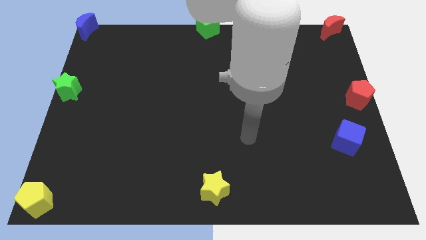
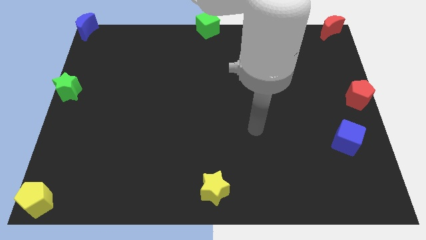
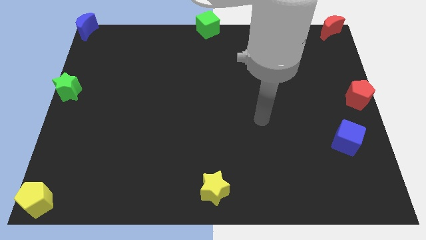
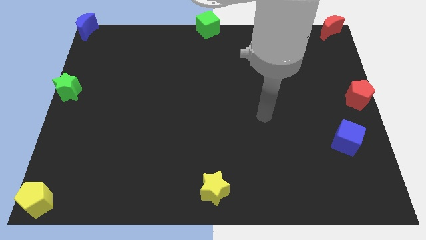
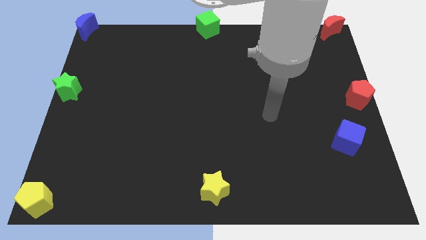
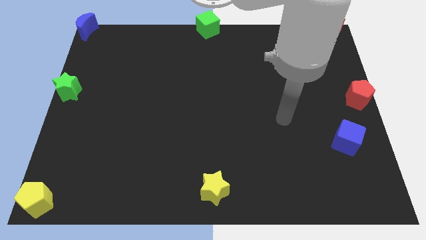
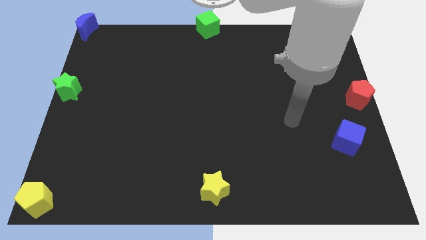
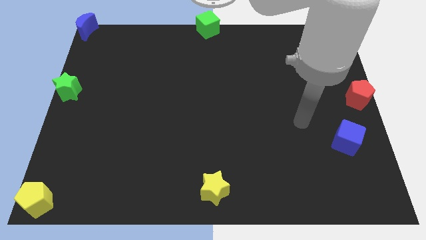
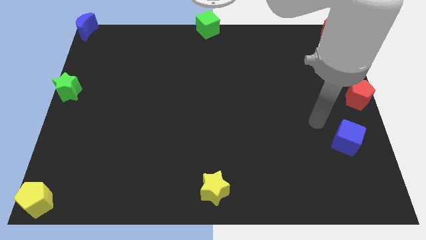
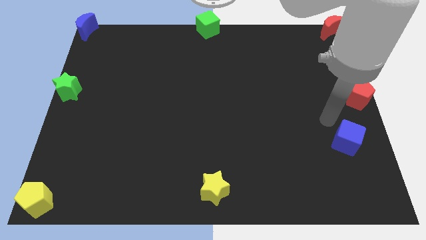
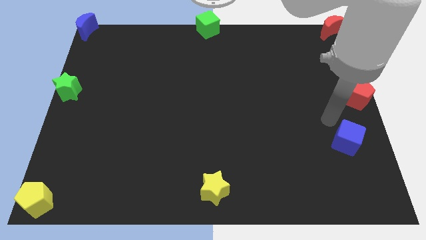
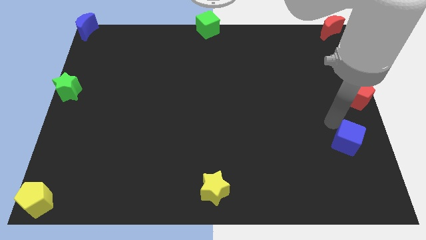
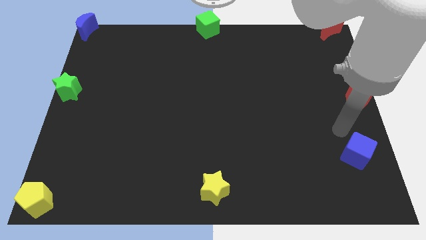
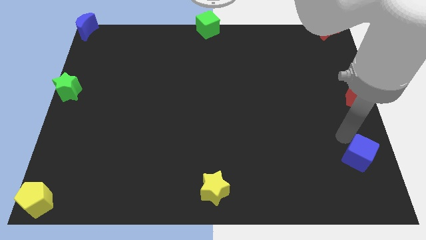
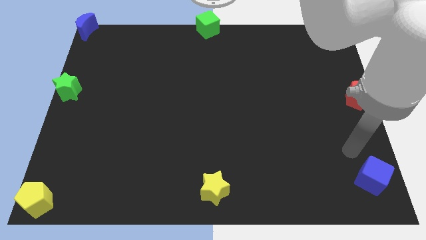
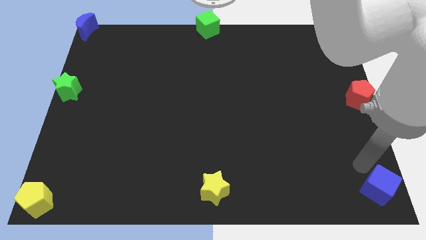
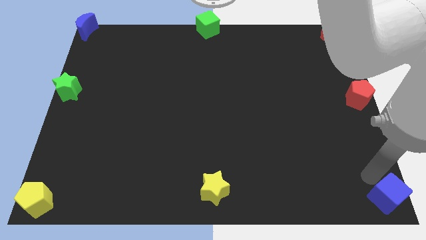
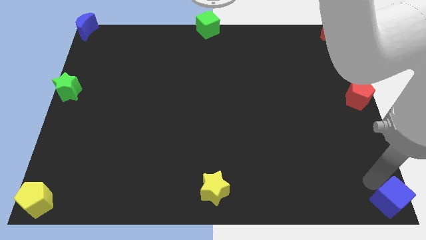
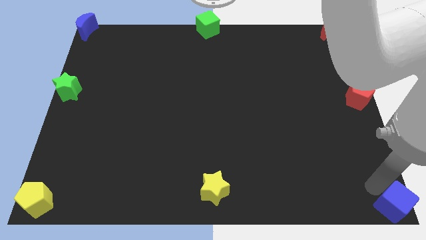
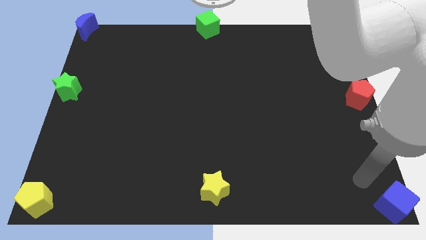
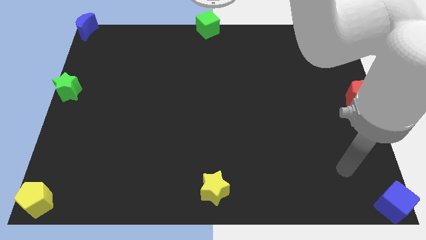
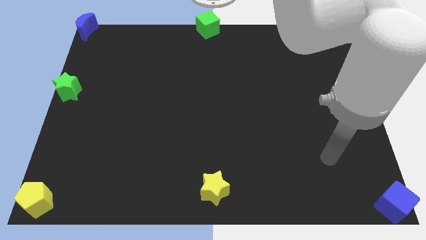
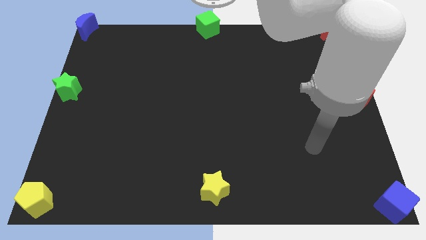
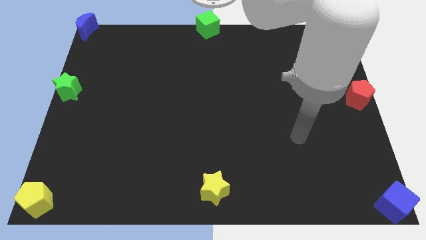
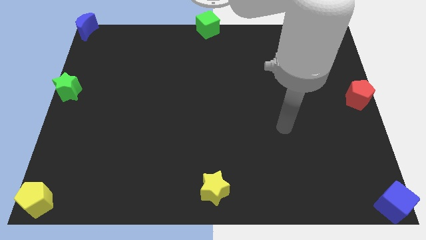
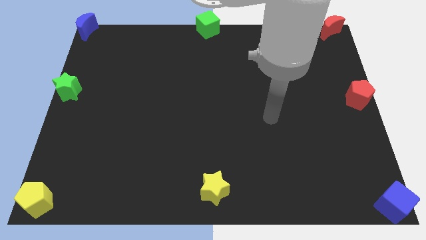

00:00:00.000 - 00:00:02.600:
move the blue cube to the right bottom corner of the board

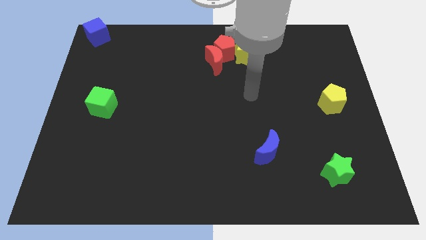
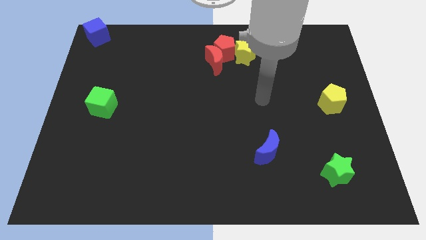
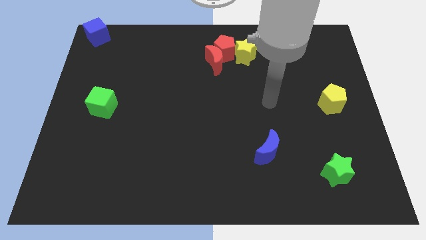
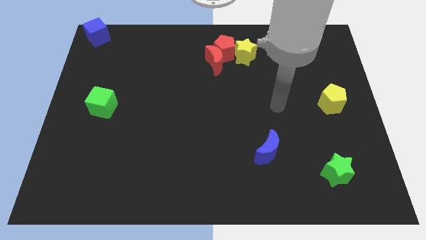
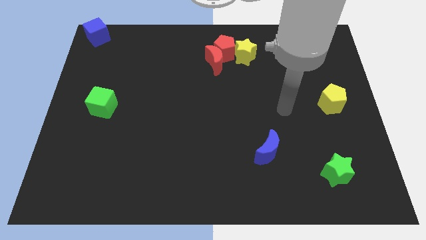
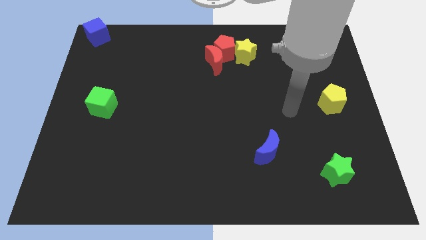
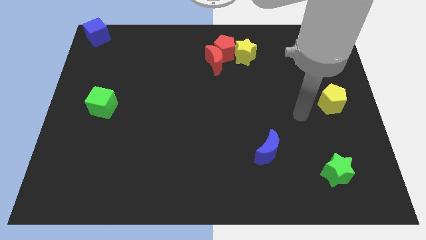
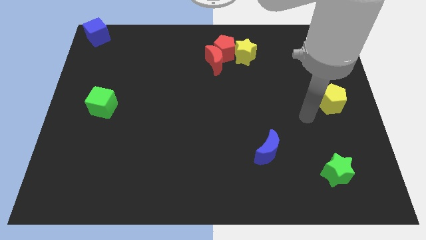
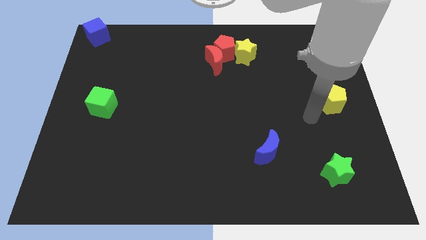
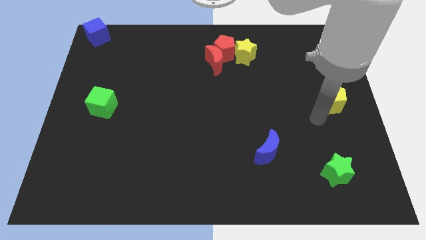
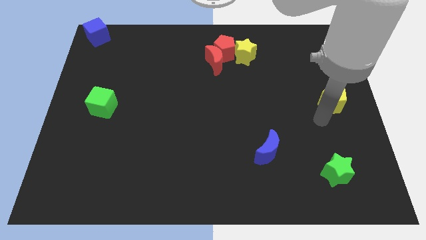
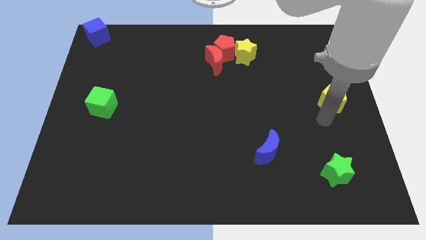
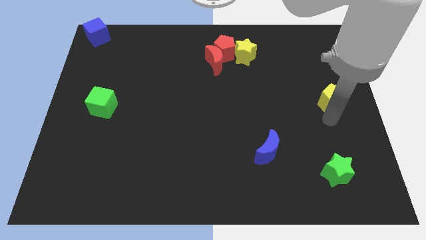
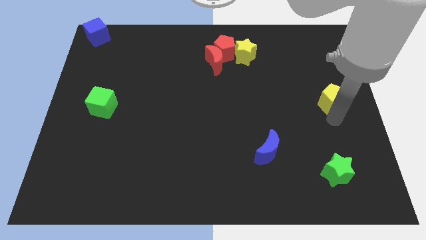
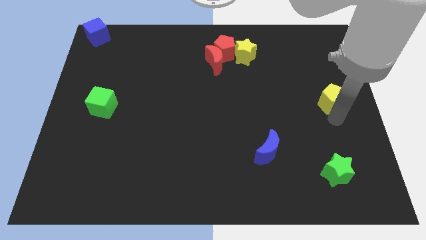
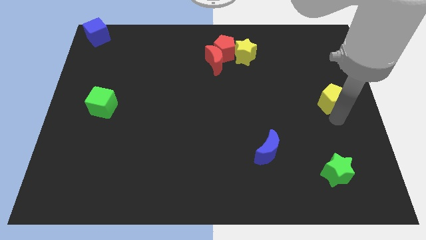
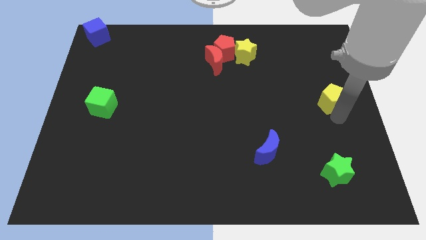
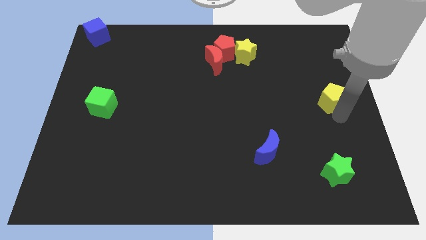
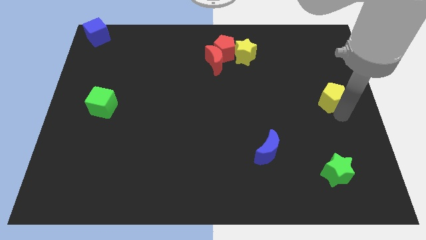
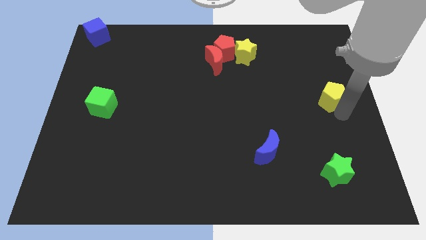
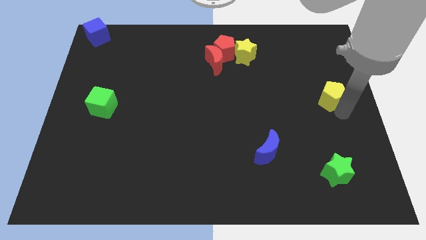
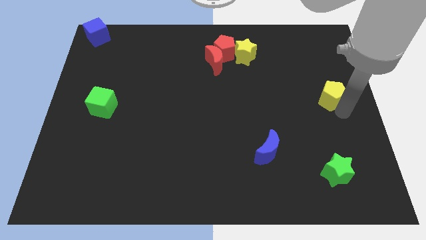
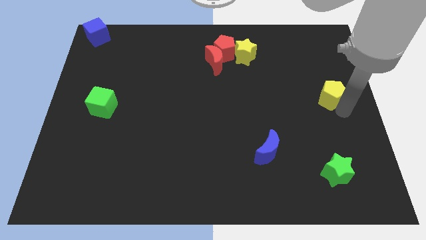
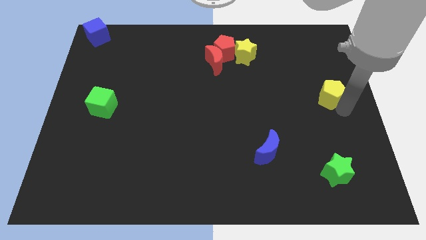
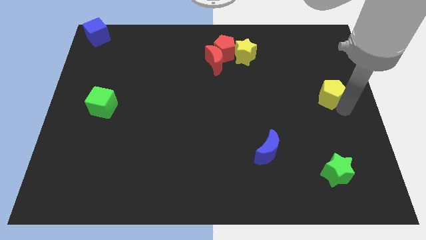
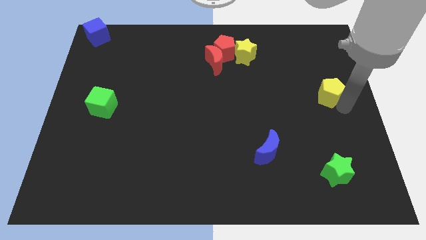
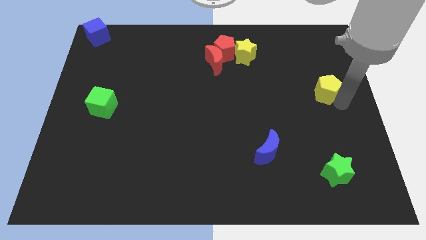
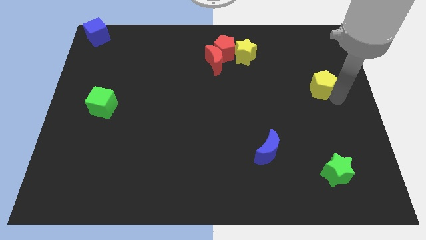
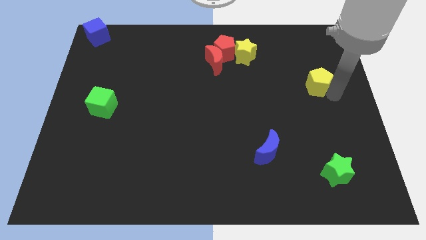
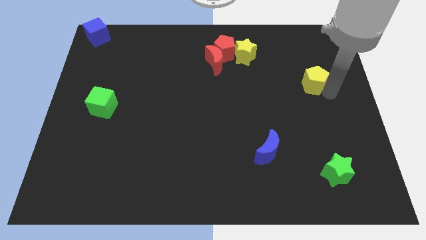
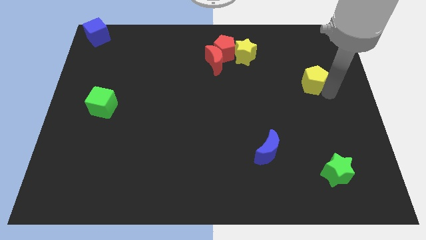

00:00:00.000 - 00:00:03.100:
move the yellow pentagon diagonally to the blue moon

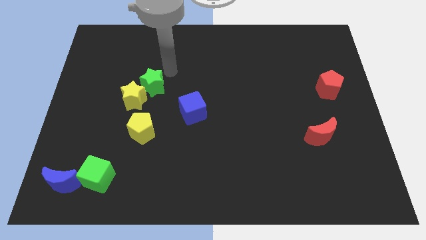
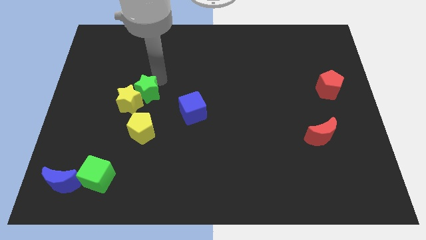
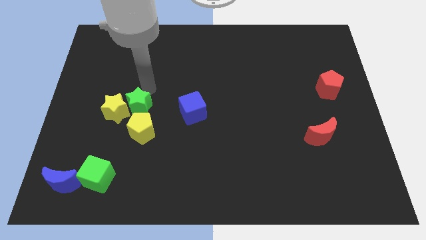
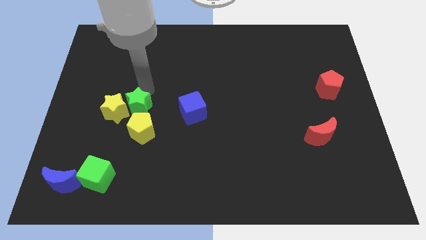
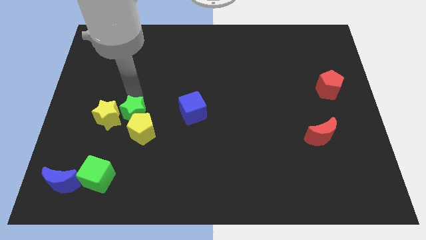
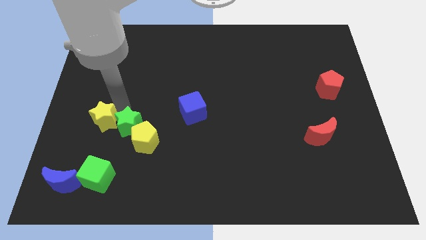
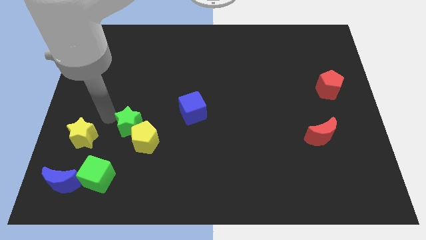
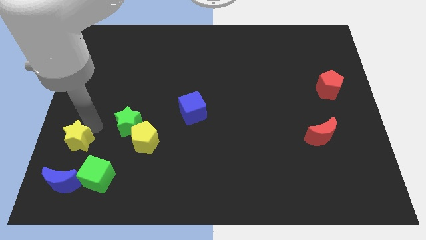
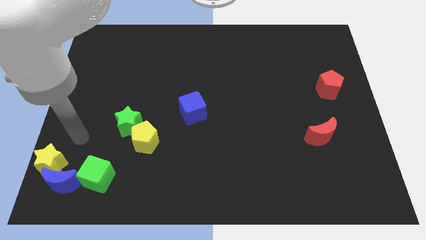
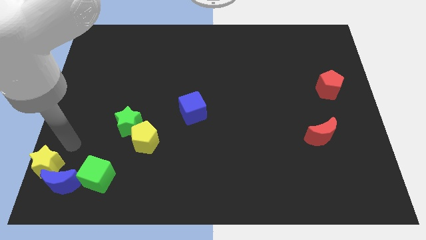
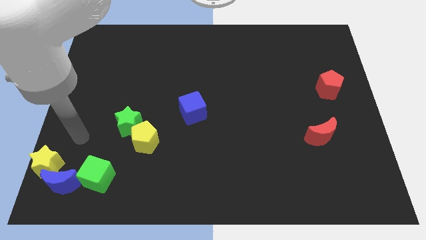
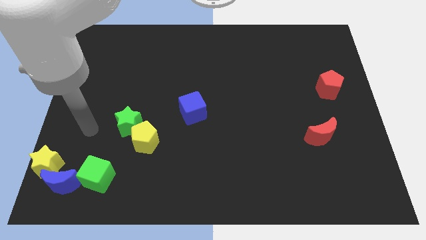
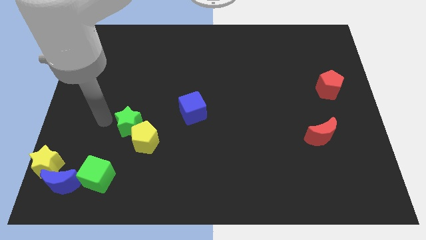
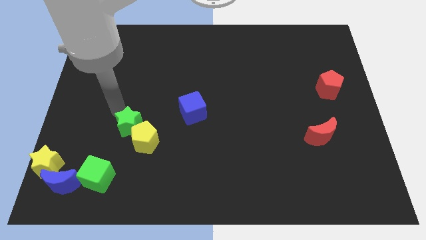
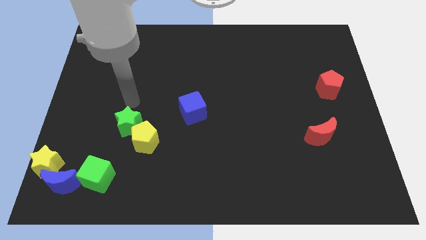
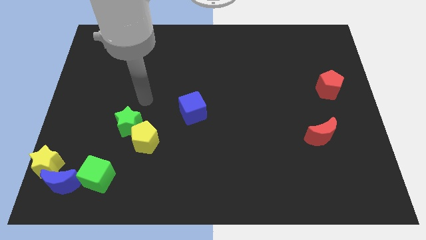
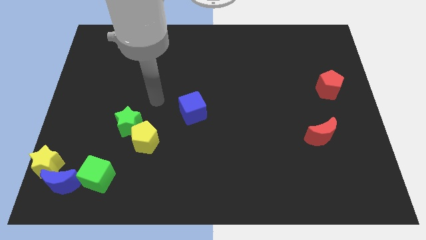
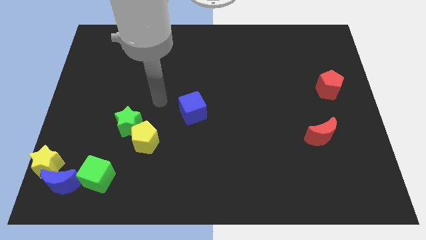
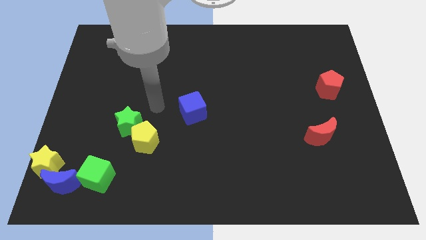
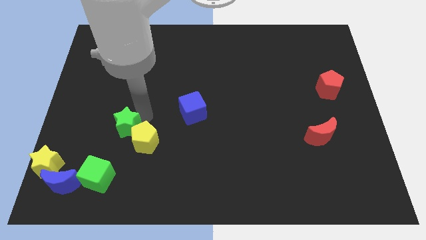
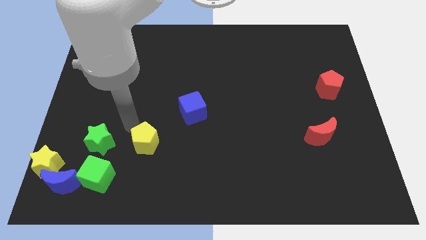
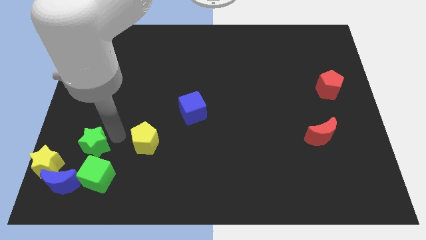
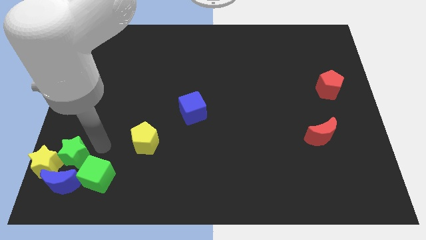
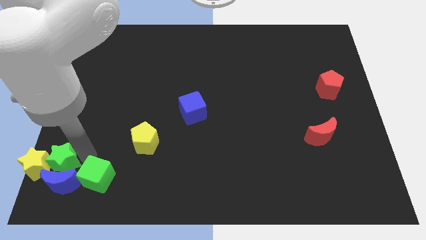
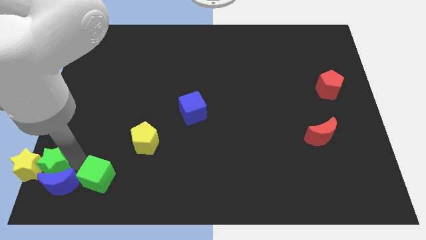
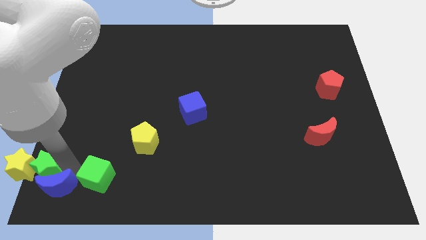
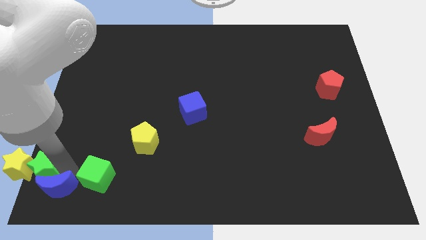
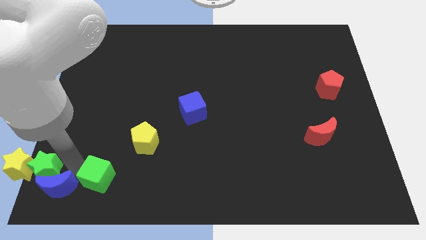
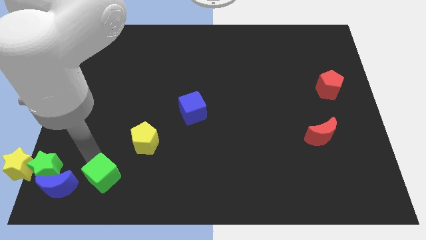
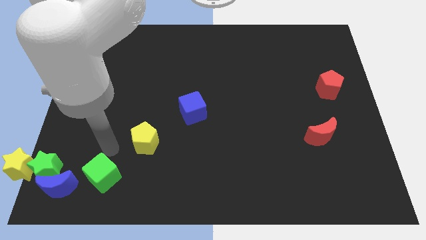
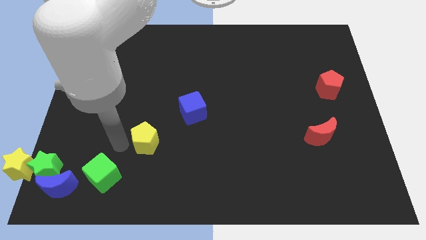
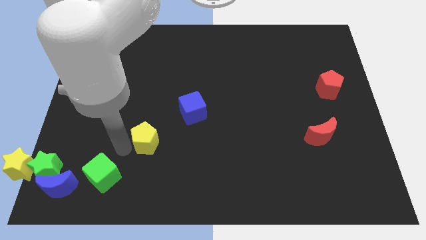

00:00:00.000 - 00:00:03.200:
move both the stars to the top left side of the blue crescent
